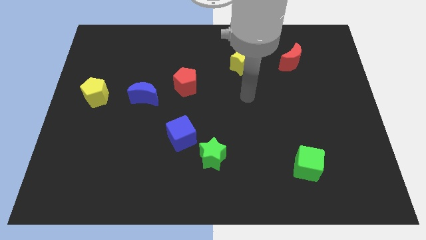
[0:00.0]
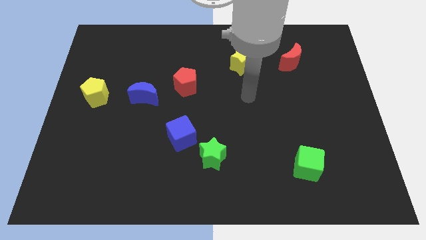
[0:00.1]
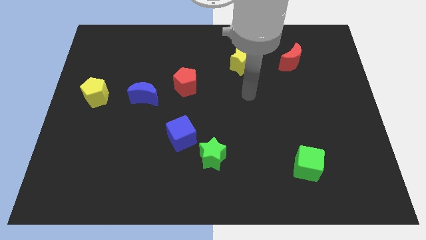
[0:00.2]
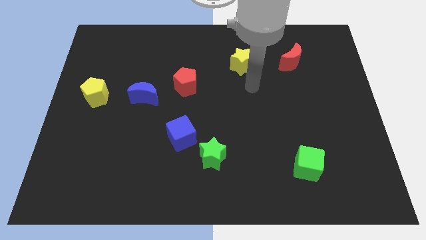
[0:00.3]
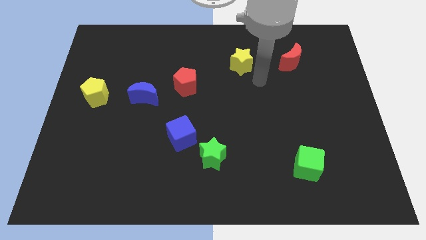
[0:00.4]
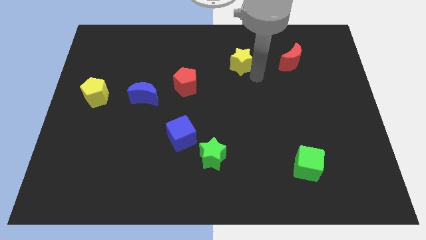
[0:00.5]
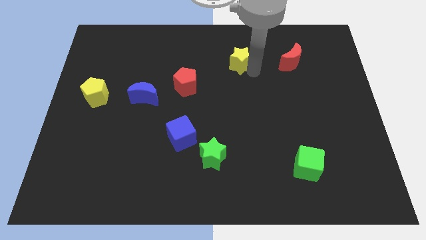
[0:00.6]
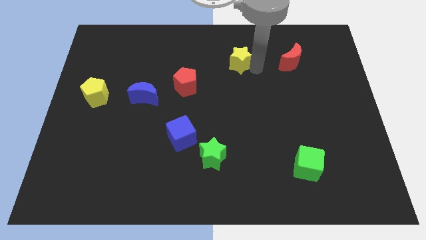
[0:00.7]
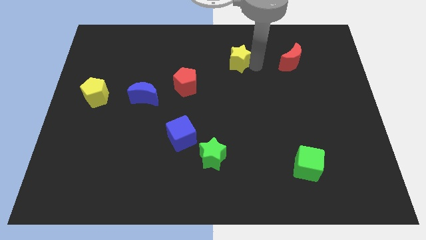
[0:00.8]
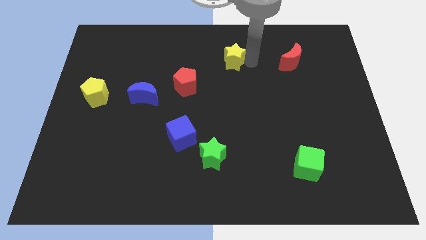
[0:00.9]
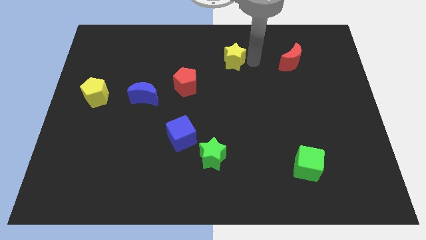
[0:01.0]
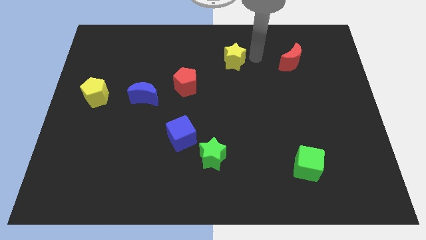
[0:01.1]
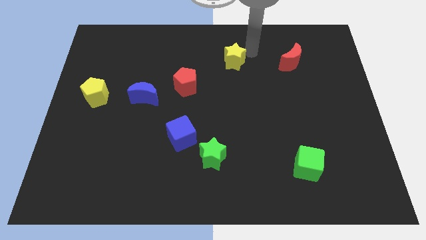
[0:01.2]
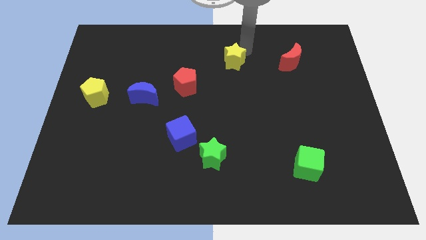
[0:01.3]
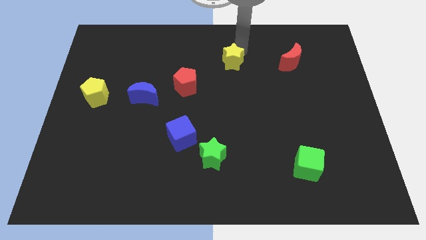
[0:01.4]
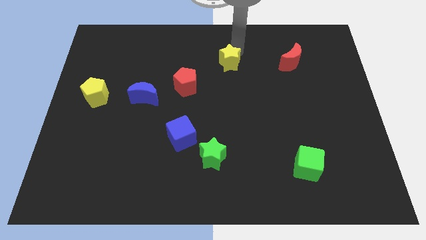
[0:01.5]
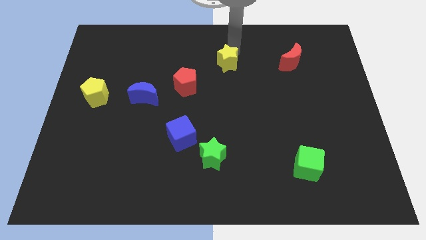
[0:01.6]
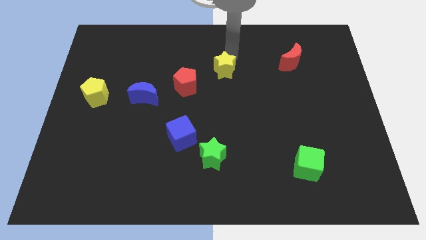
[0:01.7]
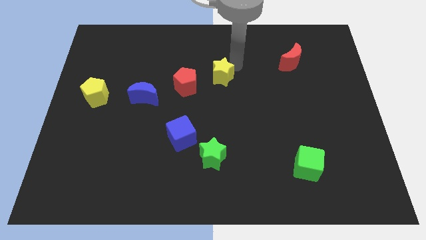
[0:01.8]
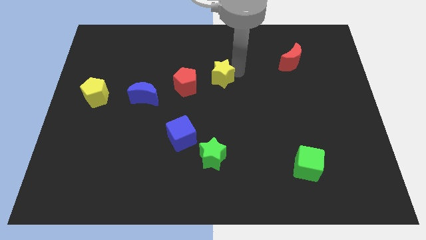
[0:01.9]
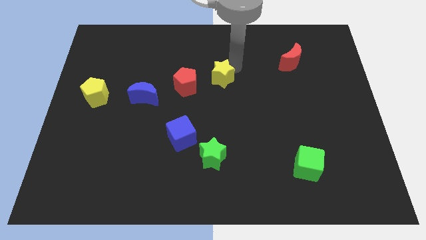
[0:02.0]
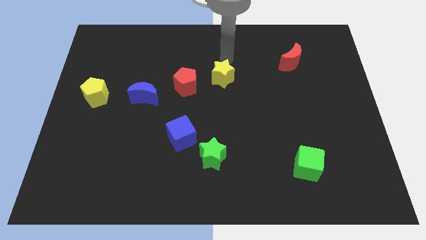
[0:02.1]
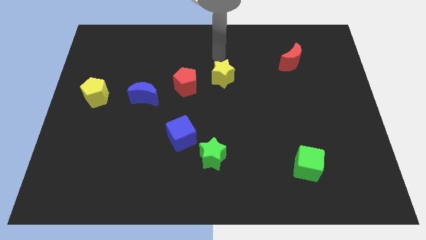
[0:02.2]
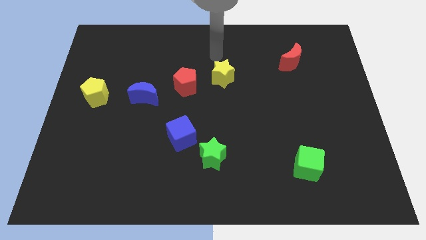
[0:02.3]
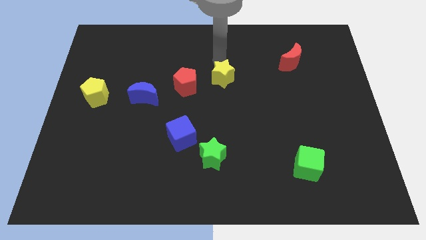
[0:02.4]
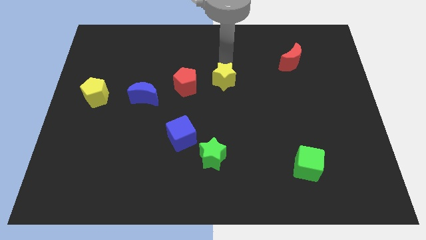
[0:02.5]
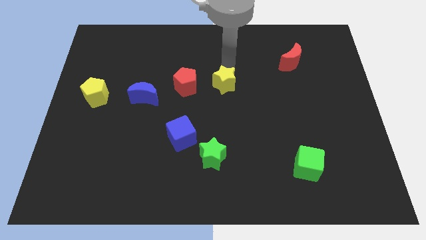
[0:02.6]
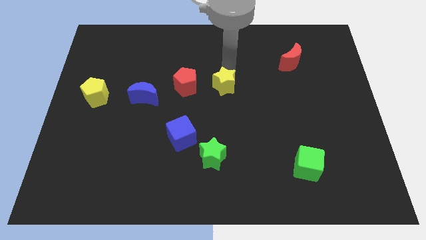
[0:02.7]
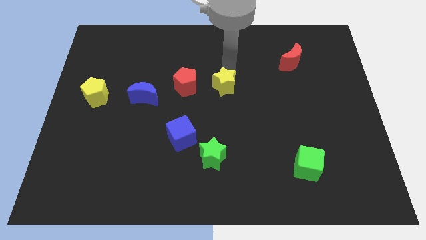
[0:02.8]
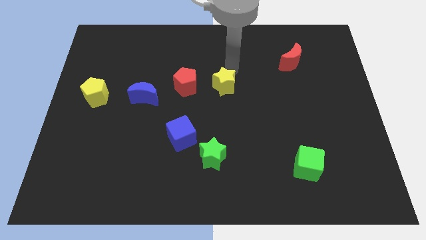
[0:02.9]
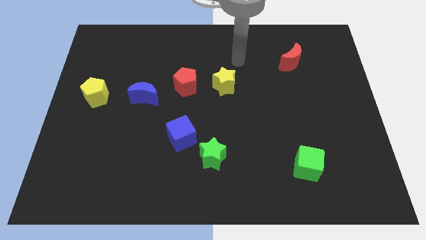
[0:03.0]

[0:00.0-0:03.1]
push yellow star to the right of red pentagon

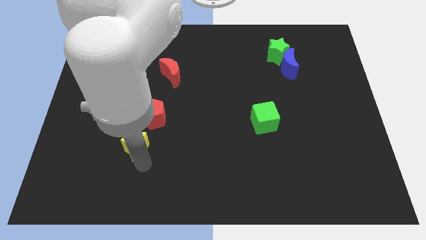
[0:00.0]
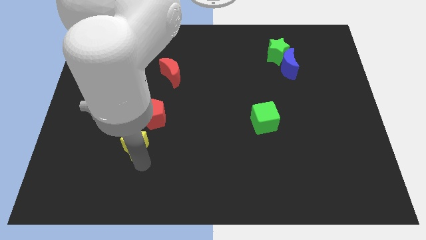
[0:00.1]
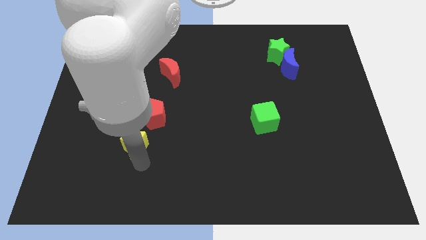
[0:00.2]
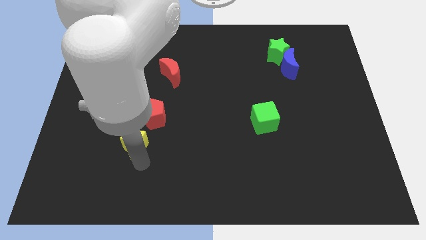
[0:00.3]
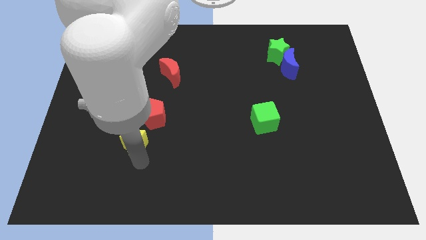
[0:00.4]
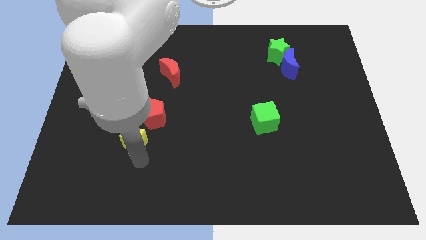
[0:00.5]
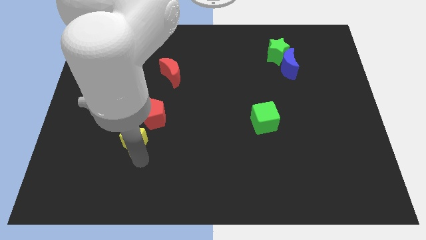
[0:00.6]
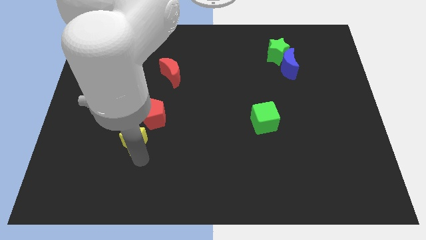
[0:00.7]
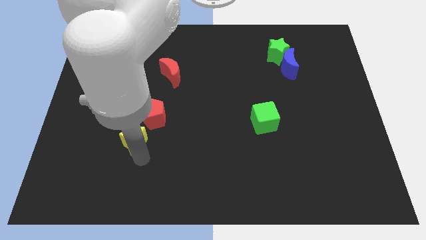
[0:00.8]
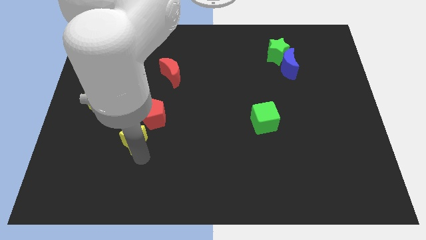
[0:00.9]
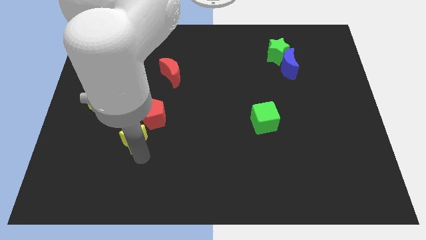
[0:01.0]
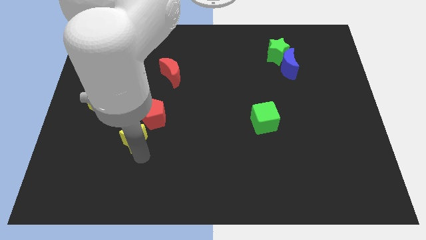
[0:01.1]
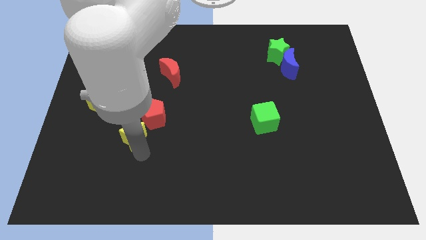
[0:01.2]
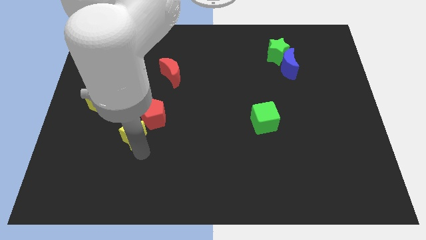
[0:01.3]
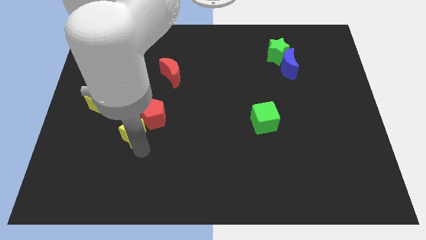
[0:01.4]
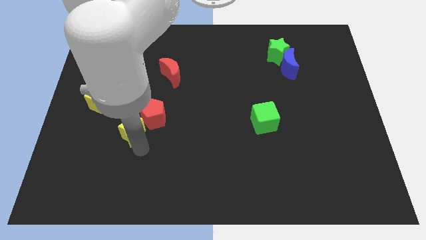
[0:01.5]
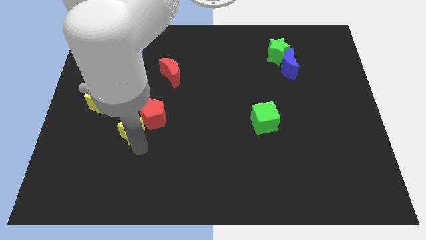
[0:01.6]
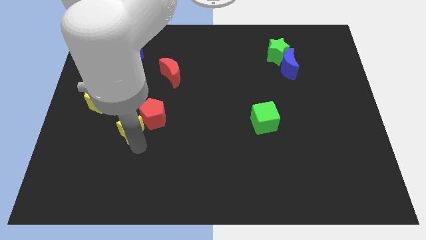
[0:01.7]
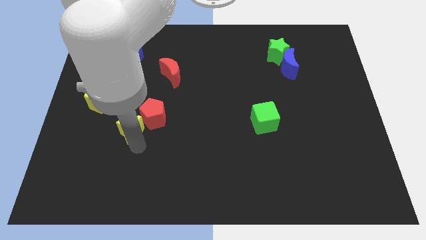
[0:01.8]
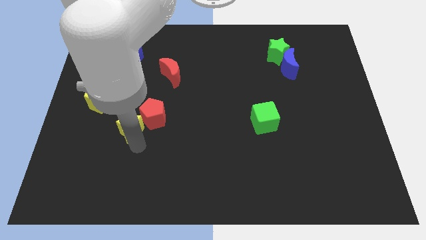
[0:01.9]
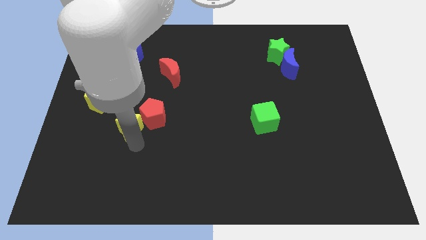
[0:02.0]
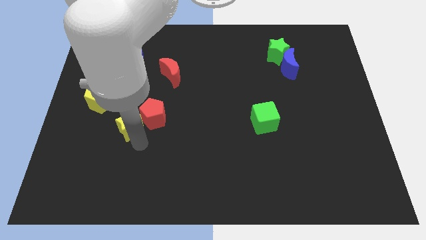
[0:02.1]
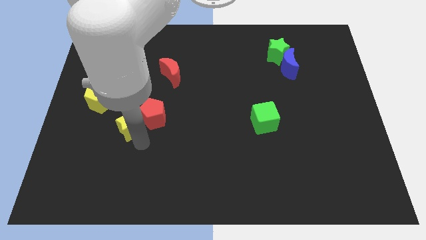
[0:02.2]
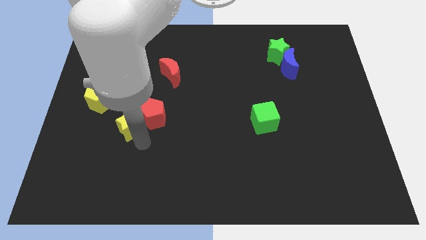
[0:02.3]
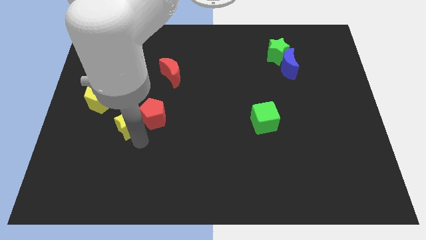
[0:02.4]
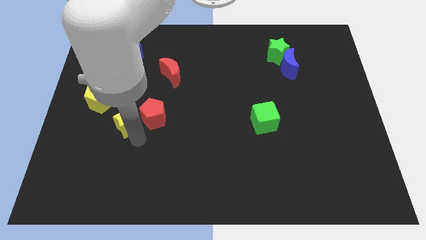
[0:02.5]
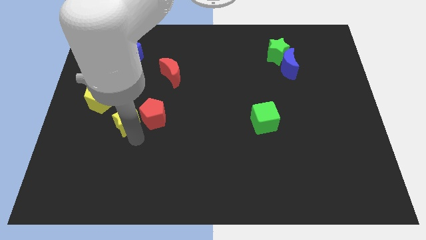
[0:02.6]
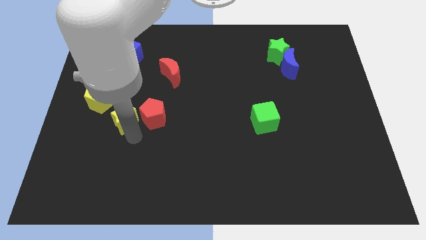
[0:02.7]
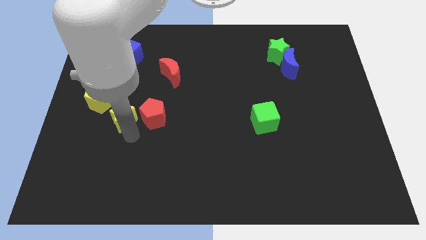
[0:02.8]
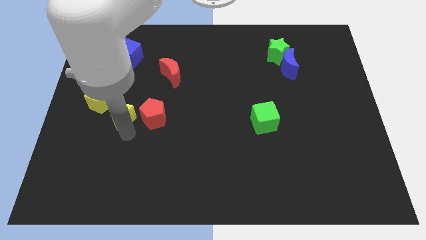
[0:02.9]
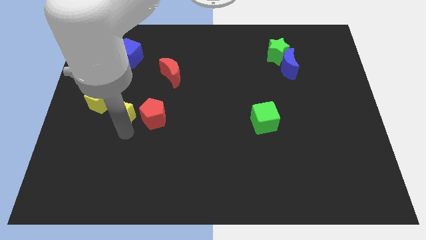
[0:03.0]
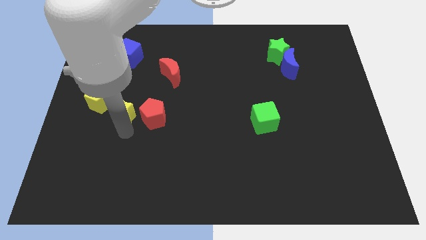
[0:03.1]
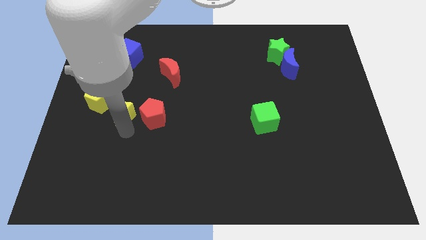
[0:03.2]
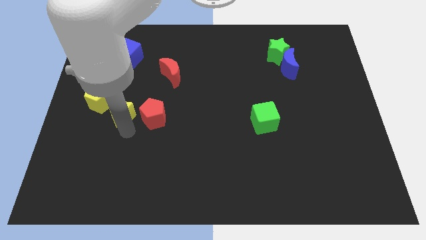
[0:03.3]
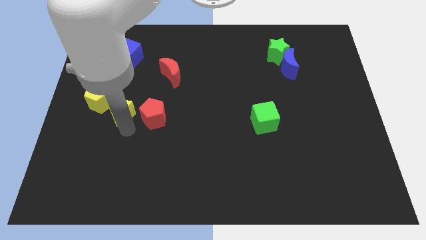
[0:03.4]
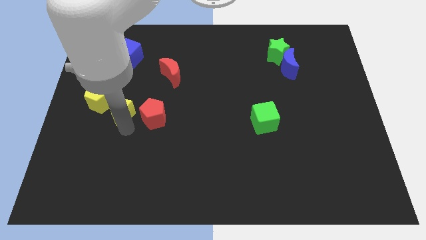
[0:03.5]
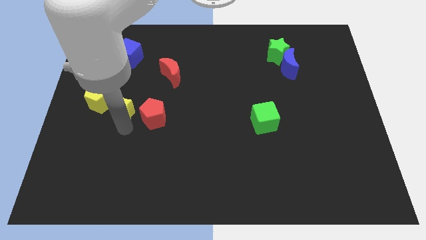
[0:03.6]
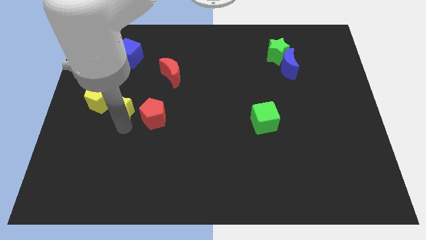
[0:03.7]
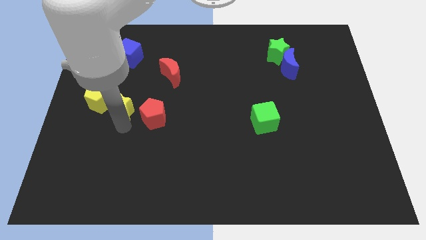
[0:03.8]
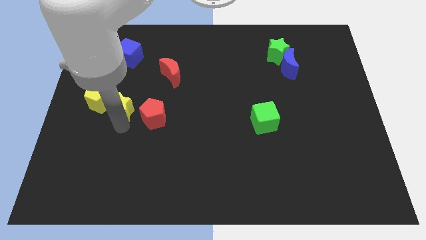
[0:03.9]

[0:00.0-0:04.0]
move the star in between the red pentagon and yellow pentagon

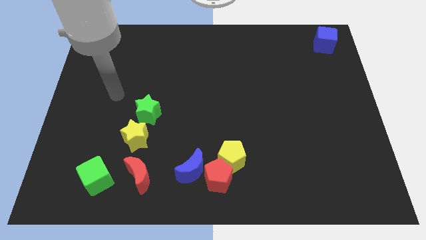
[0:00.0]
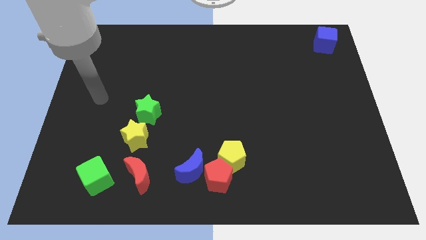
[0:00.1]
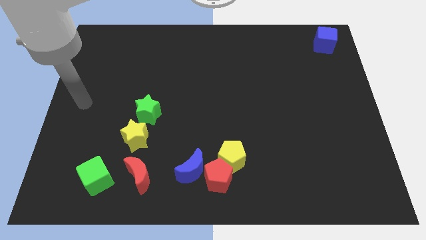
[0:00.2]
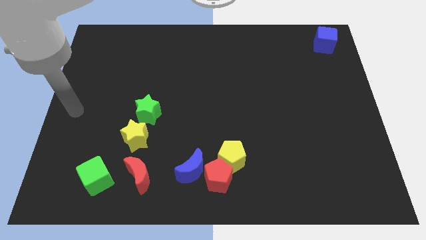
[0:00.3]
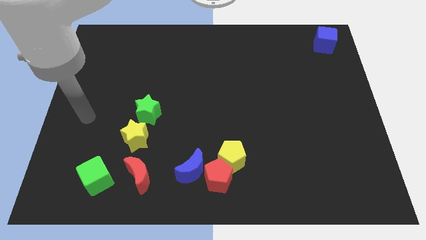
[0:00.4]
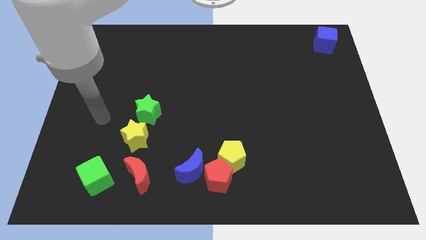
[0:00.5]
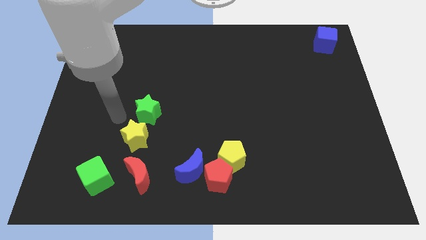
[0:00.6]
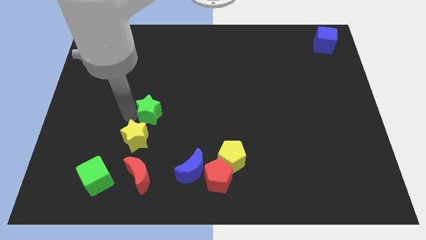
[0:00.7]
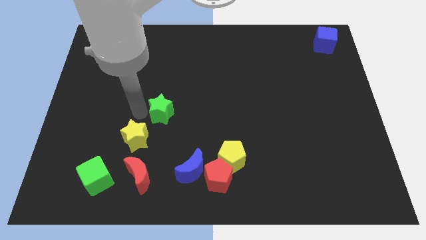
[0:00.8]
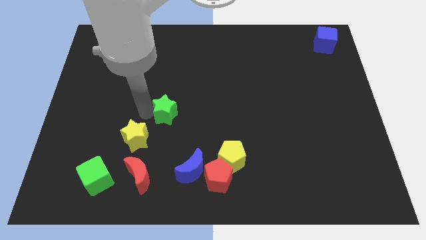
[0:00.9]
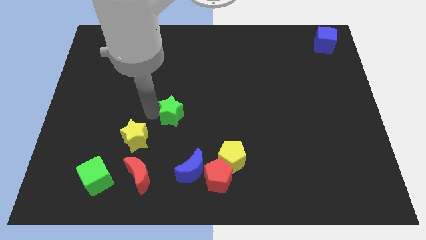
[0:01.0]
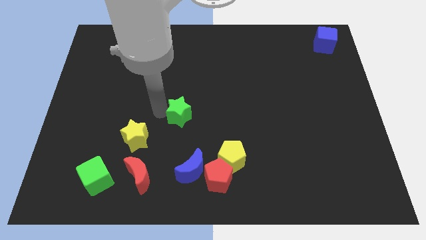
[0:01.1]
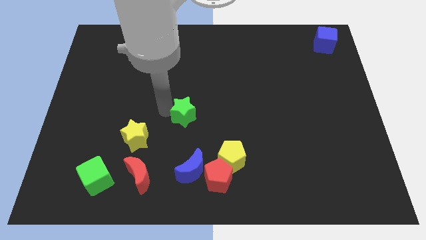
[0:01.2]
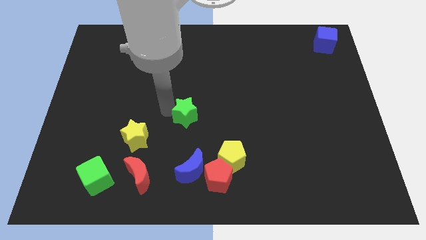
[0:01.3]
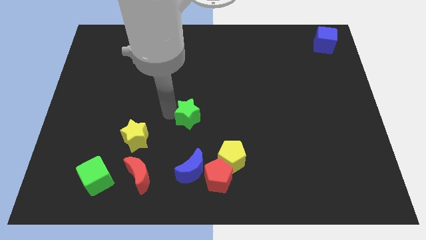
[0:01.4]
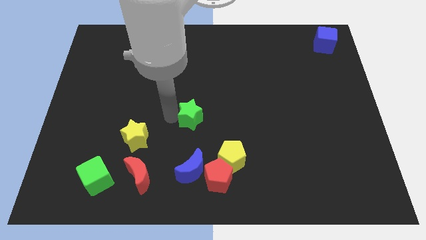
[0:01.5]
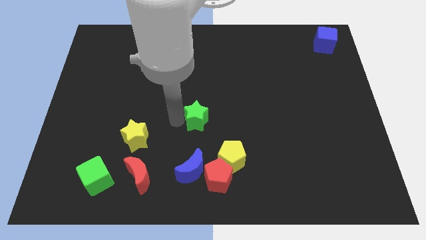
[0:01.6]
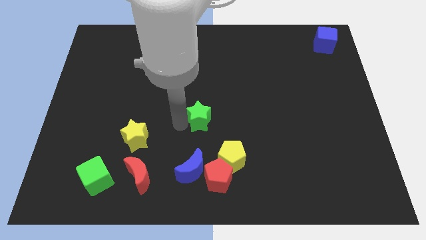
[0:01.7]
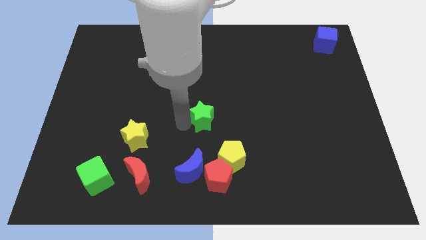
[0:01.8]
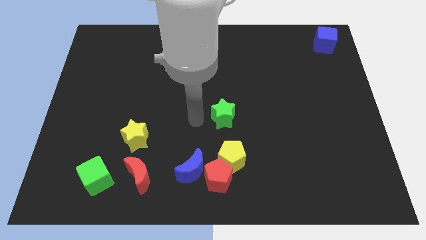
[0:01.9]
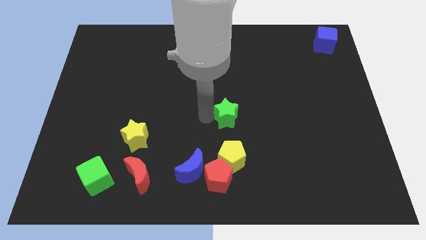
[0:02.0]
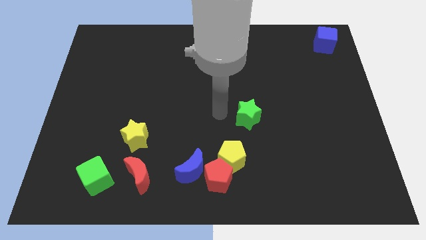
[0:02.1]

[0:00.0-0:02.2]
slide the green star towards the center of the board
